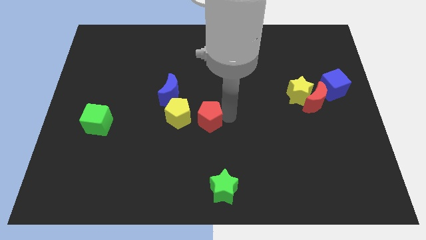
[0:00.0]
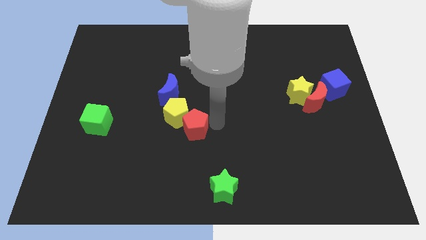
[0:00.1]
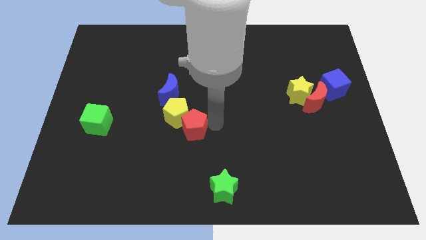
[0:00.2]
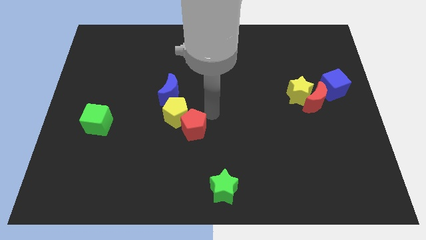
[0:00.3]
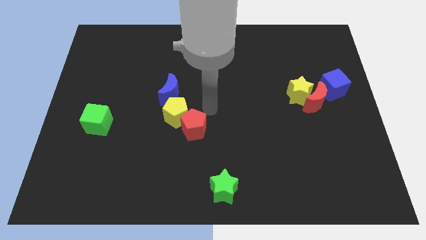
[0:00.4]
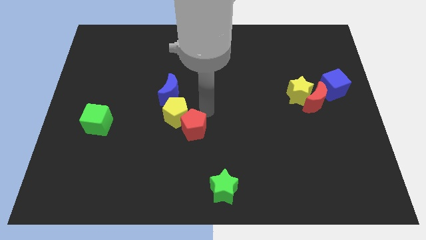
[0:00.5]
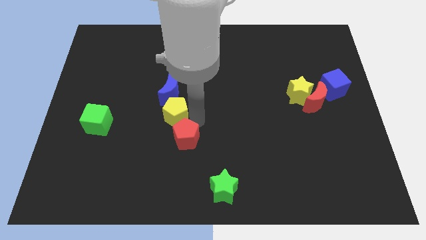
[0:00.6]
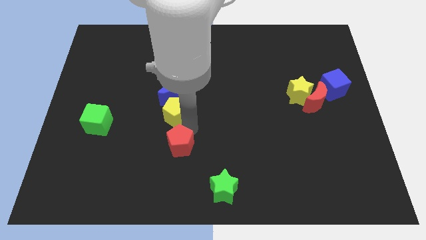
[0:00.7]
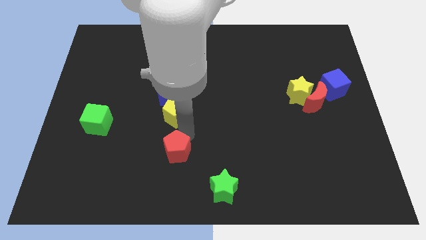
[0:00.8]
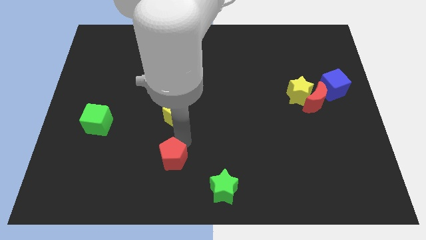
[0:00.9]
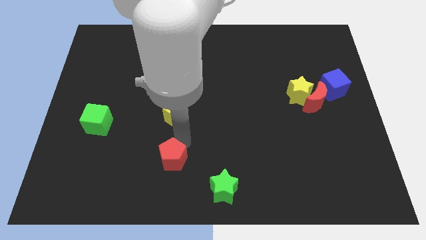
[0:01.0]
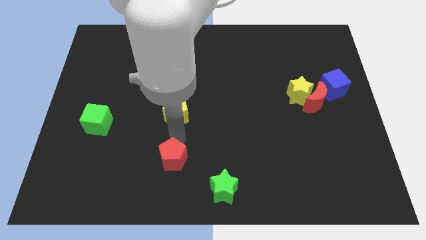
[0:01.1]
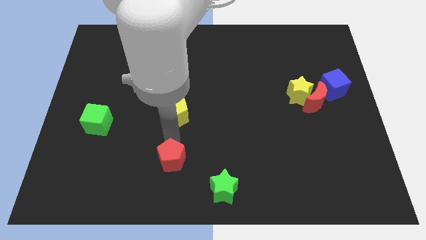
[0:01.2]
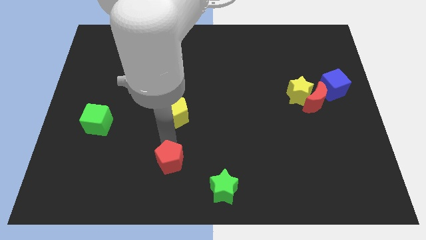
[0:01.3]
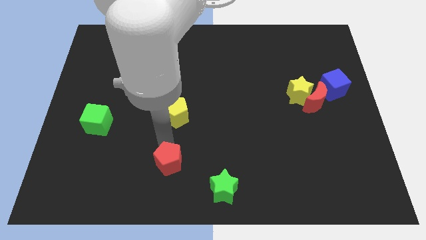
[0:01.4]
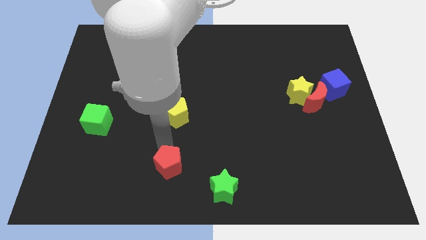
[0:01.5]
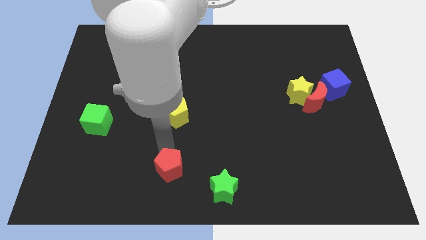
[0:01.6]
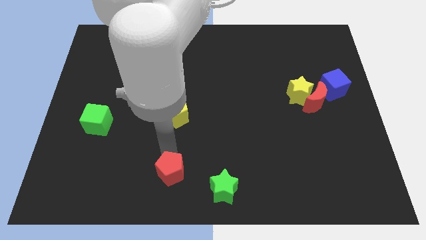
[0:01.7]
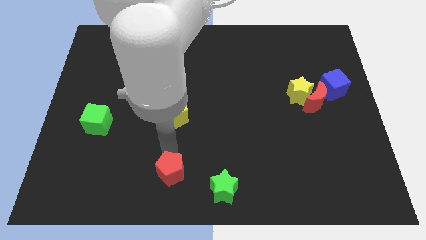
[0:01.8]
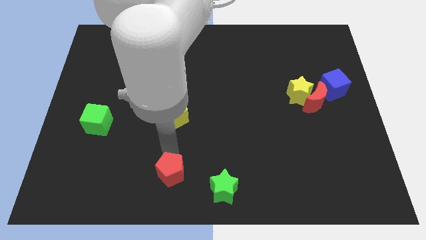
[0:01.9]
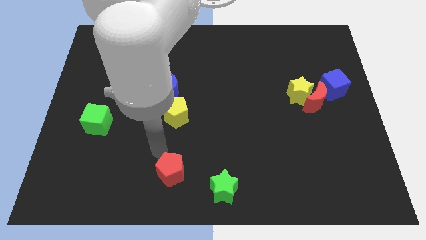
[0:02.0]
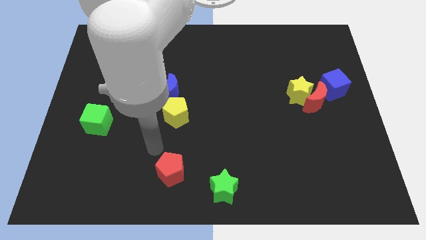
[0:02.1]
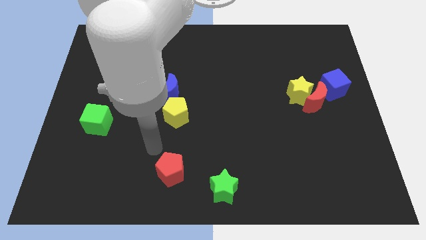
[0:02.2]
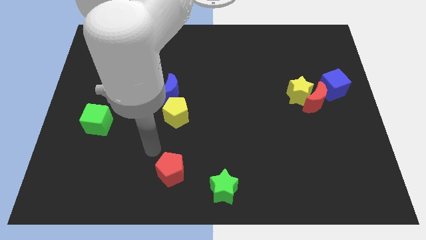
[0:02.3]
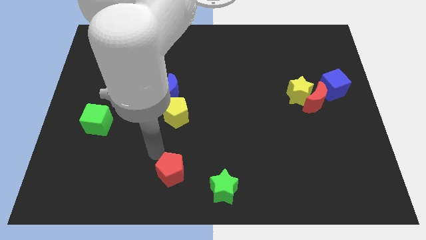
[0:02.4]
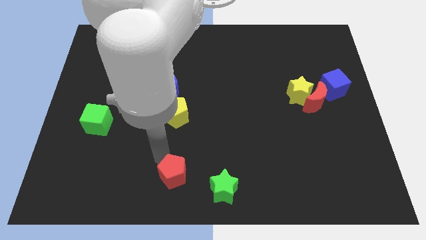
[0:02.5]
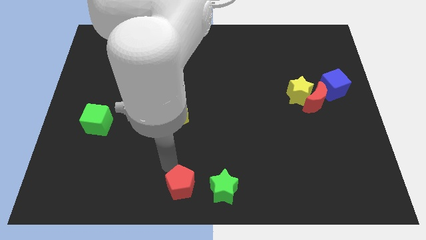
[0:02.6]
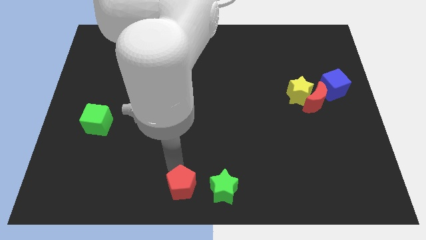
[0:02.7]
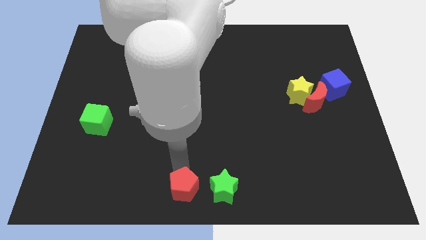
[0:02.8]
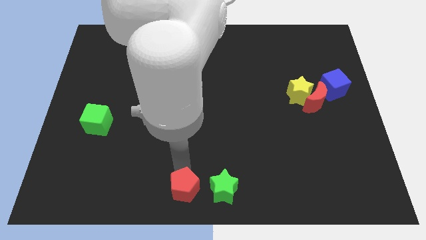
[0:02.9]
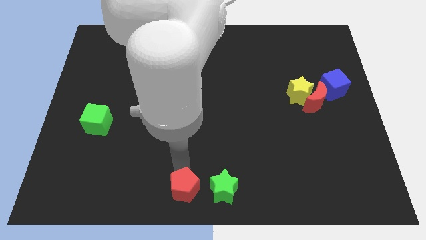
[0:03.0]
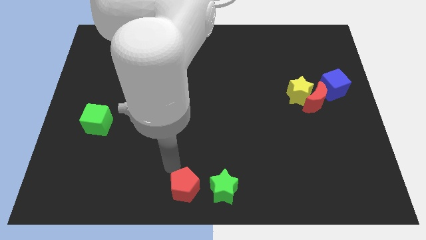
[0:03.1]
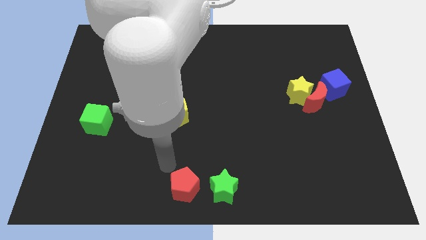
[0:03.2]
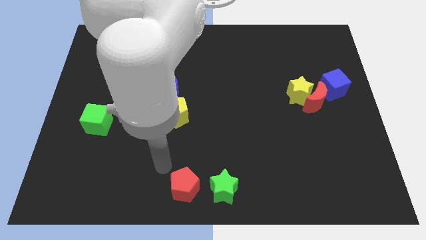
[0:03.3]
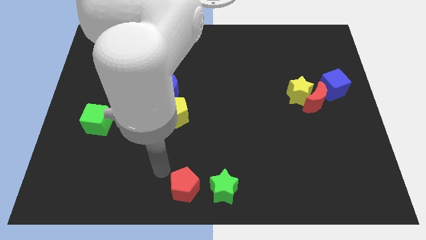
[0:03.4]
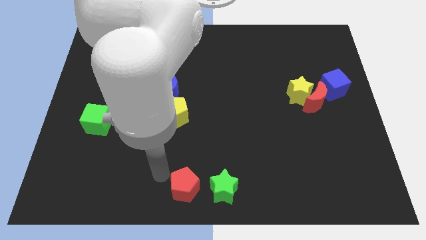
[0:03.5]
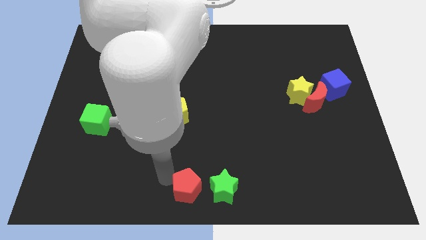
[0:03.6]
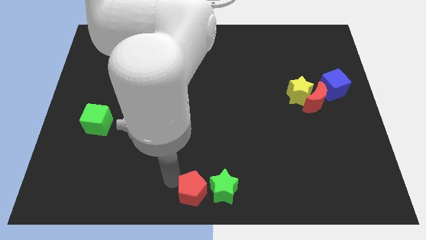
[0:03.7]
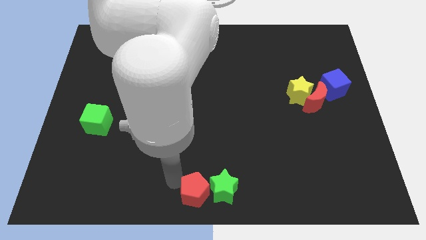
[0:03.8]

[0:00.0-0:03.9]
place the red pentagon left to the green star

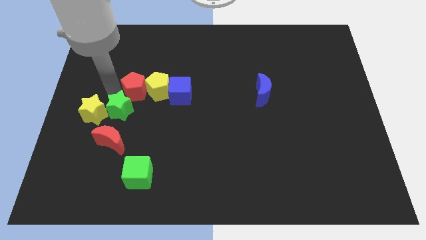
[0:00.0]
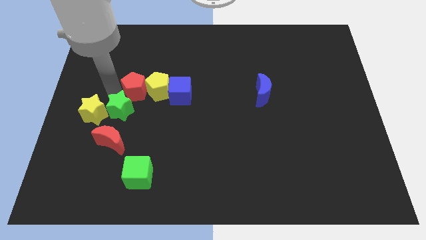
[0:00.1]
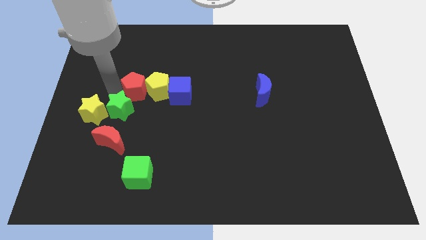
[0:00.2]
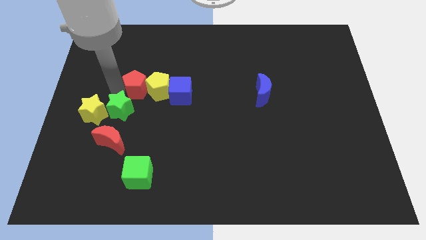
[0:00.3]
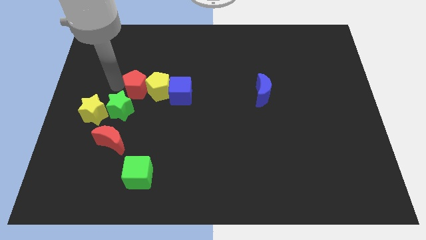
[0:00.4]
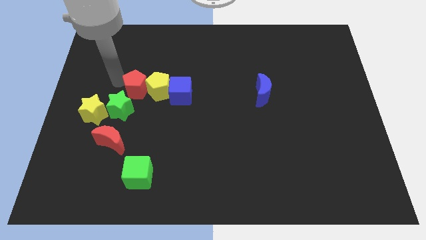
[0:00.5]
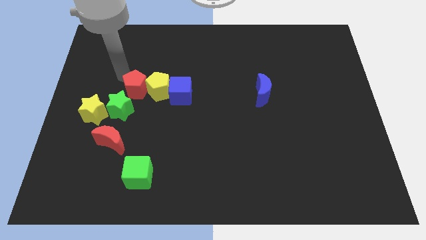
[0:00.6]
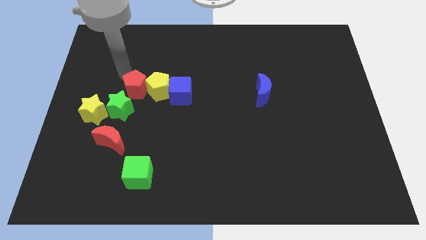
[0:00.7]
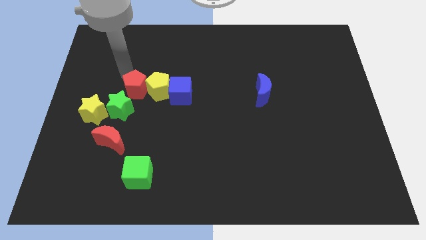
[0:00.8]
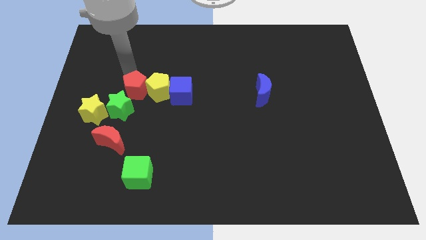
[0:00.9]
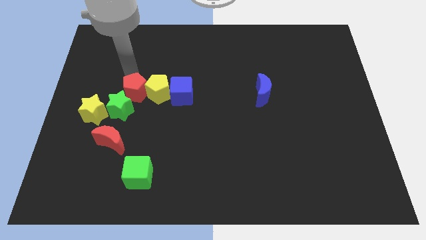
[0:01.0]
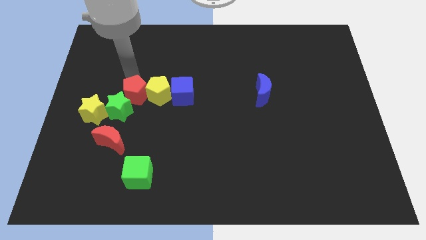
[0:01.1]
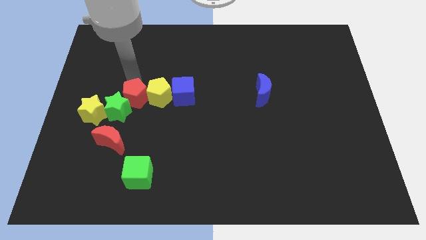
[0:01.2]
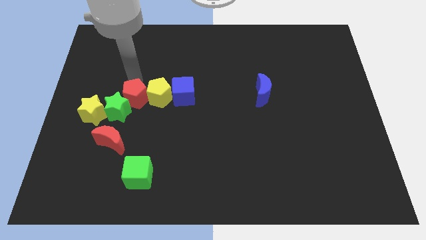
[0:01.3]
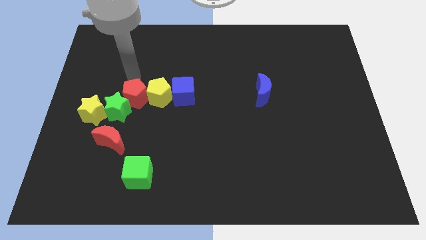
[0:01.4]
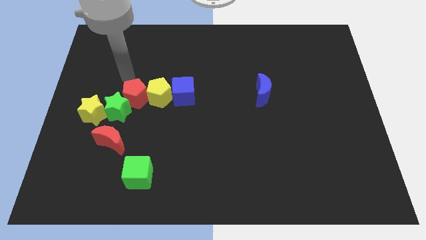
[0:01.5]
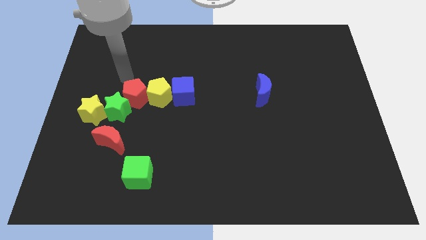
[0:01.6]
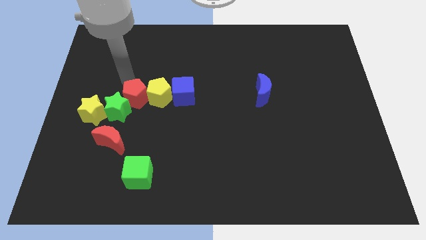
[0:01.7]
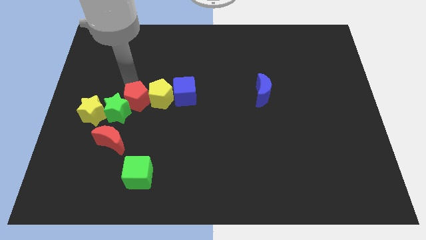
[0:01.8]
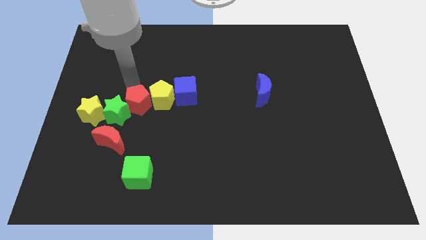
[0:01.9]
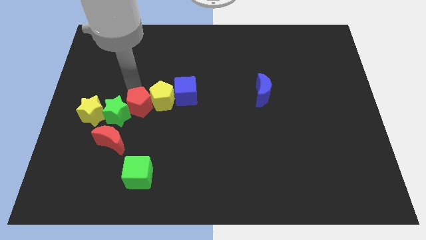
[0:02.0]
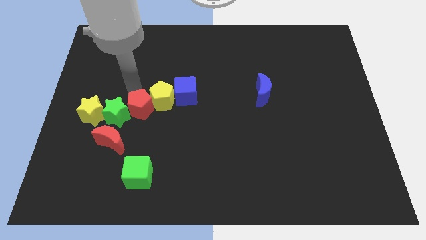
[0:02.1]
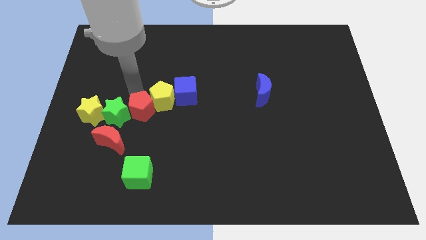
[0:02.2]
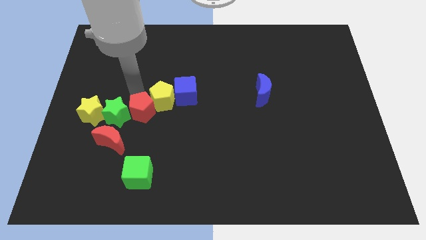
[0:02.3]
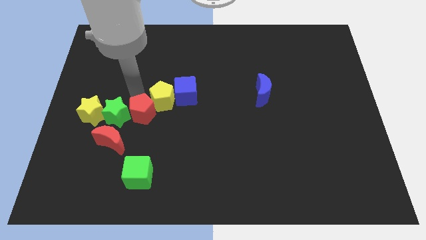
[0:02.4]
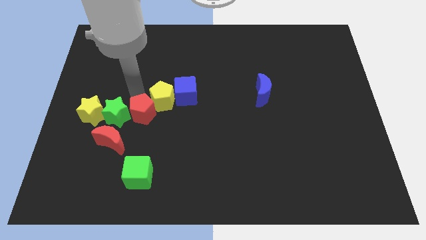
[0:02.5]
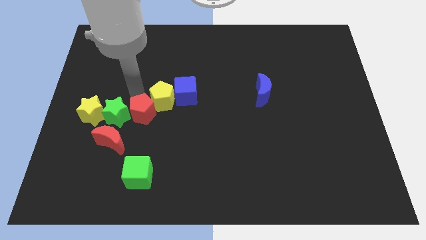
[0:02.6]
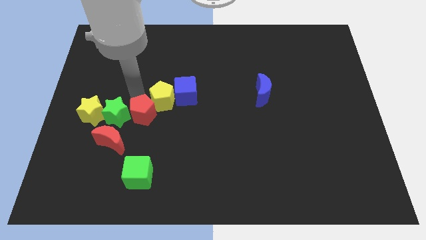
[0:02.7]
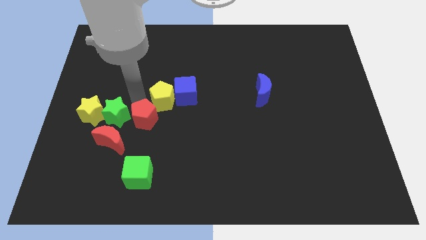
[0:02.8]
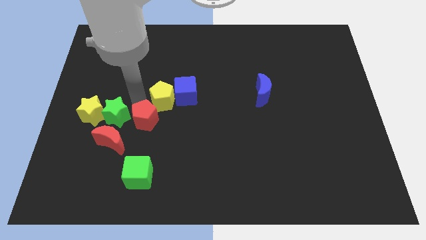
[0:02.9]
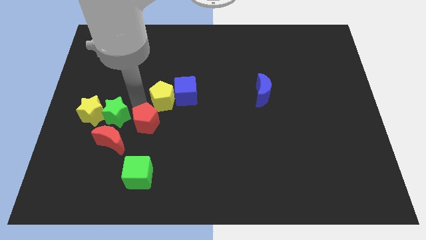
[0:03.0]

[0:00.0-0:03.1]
move the red pentagon to the right of the green star

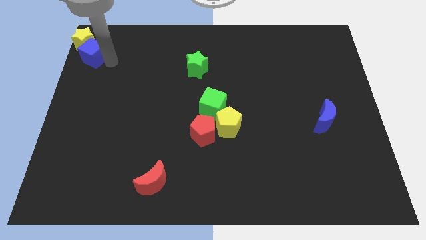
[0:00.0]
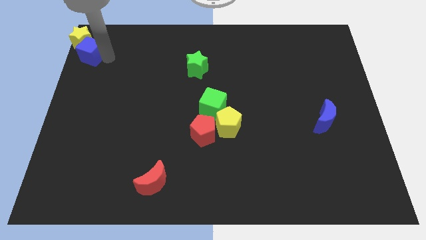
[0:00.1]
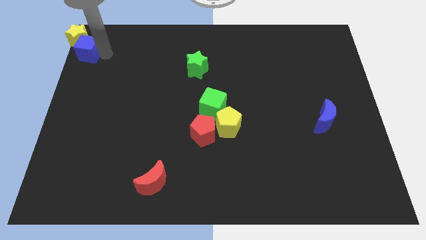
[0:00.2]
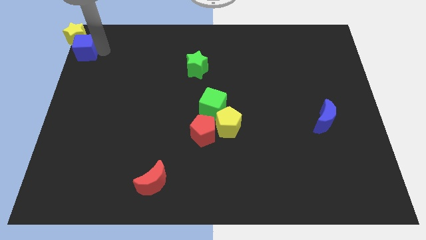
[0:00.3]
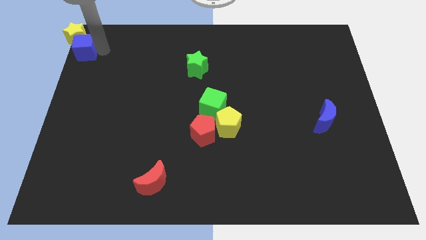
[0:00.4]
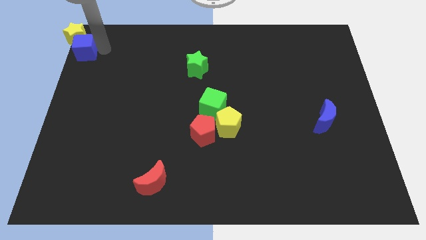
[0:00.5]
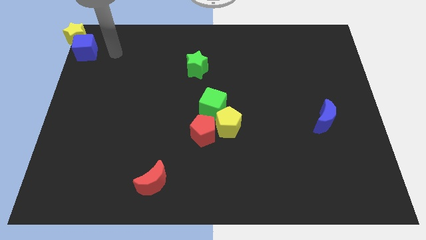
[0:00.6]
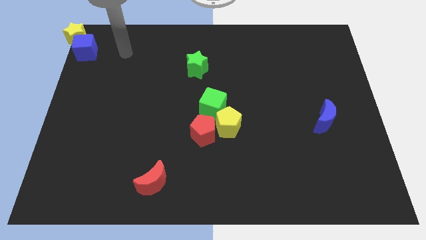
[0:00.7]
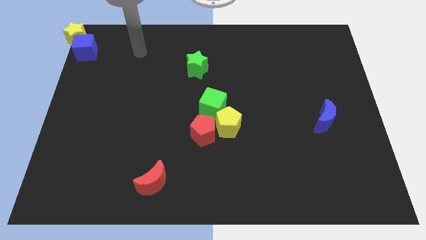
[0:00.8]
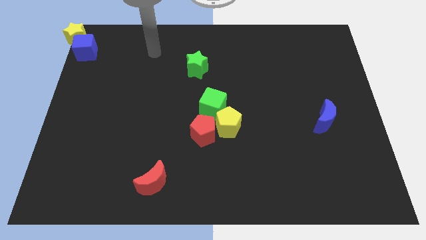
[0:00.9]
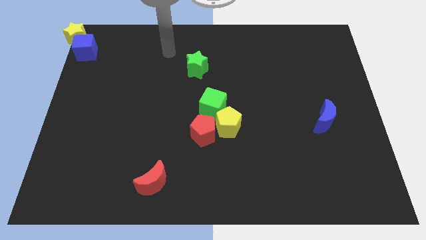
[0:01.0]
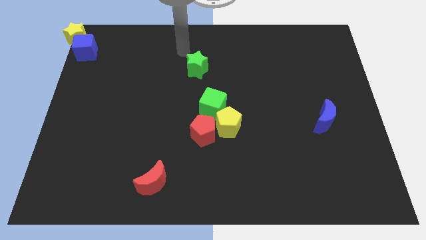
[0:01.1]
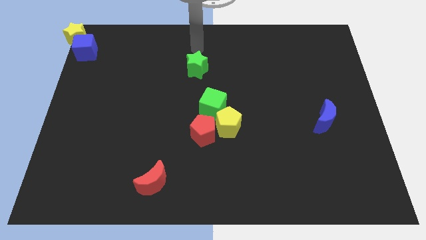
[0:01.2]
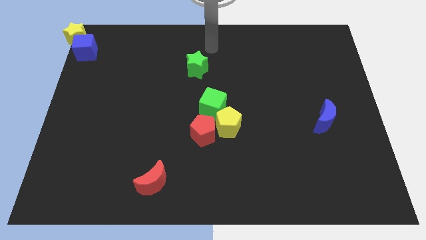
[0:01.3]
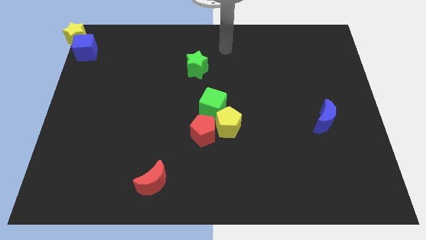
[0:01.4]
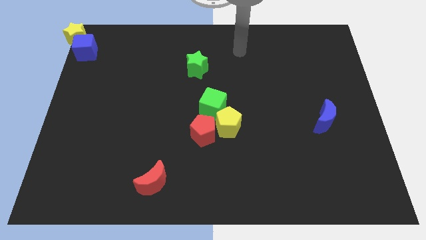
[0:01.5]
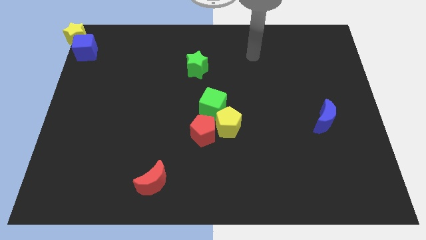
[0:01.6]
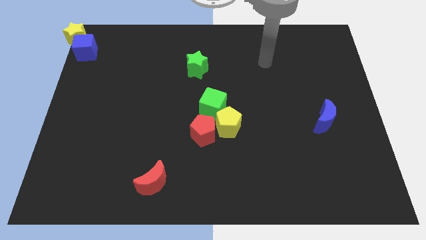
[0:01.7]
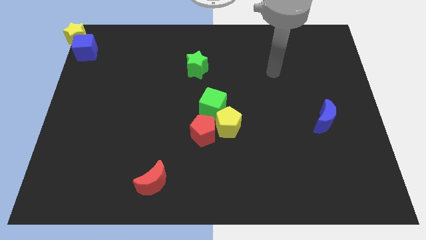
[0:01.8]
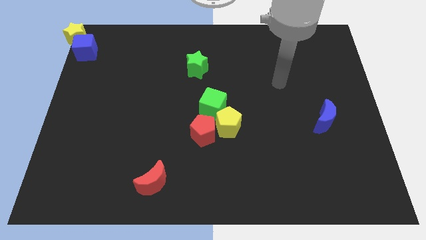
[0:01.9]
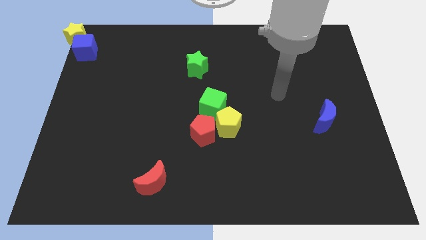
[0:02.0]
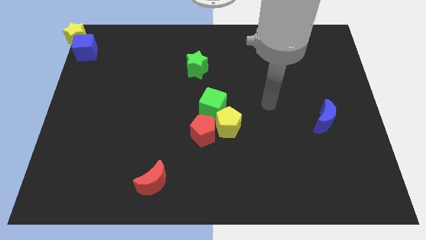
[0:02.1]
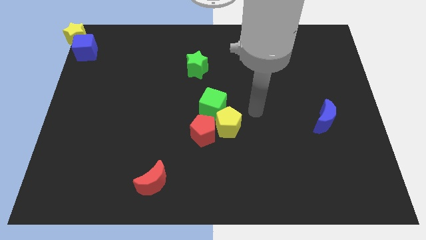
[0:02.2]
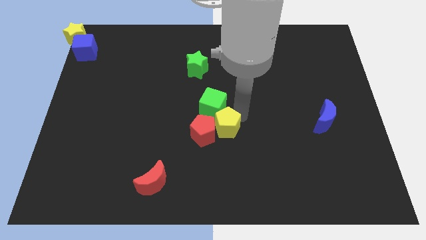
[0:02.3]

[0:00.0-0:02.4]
place your arm on the top right of yellow pentagon
